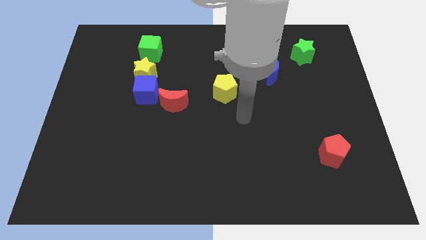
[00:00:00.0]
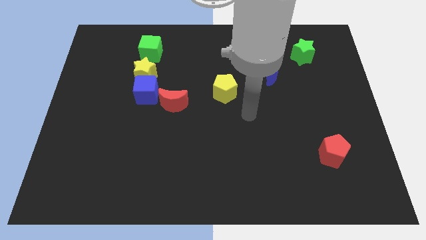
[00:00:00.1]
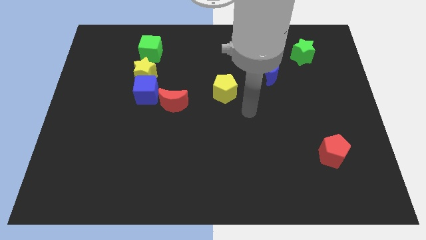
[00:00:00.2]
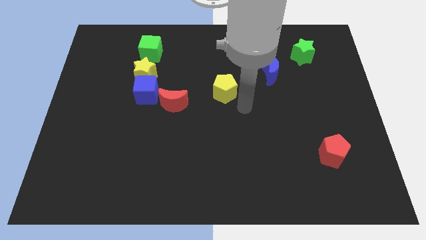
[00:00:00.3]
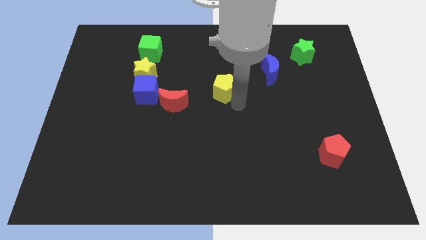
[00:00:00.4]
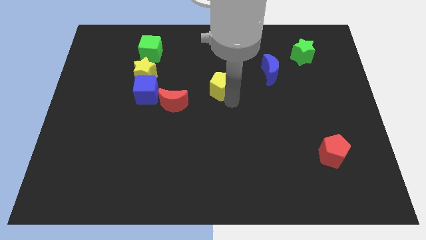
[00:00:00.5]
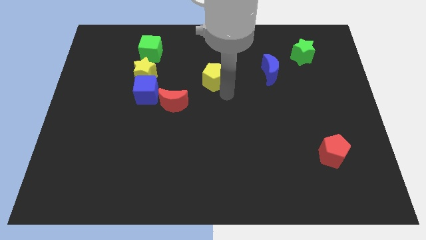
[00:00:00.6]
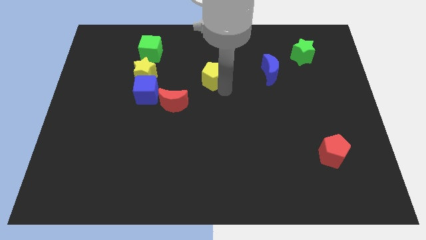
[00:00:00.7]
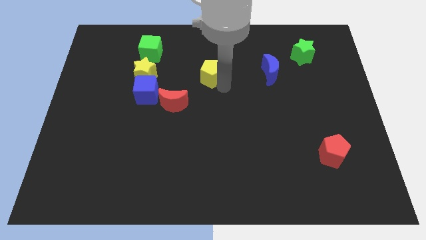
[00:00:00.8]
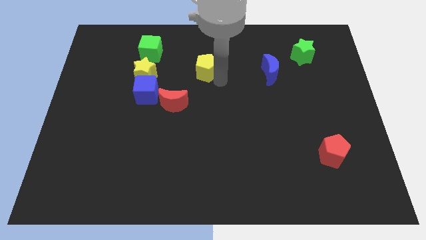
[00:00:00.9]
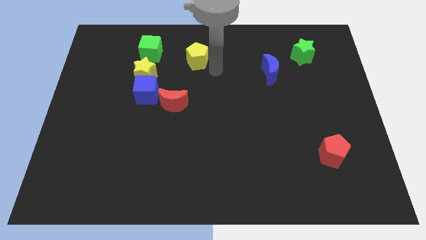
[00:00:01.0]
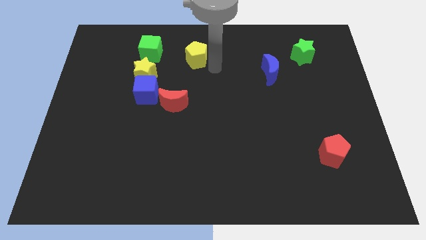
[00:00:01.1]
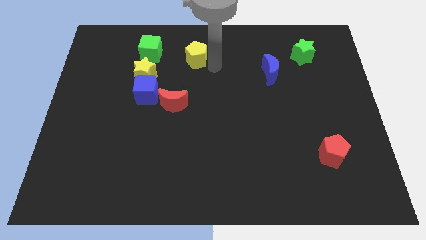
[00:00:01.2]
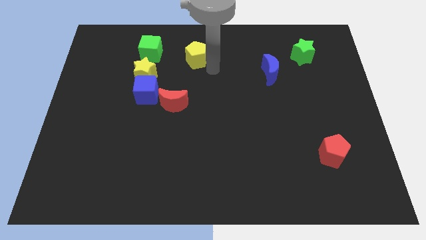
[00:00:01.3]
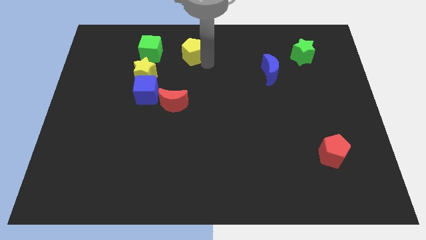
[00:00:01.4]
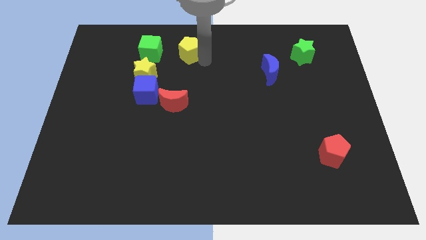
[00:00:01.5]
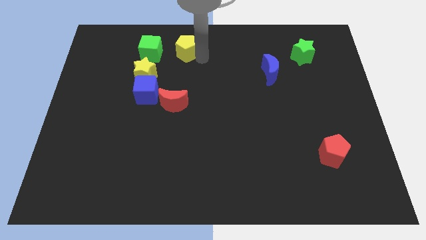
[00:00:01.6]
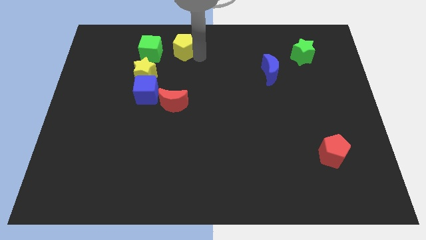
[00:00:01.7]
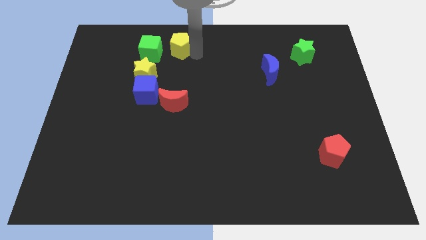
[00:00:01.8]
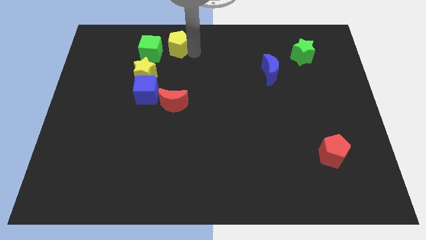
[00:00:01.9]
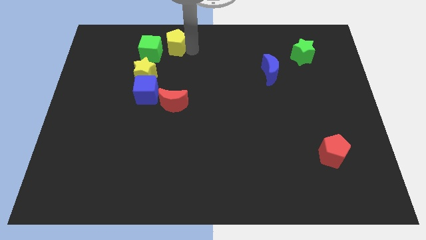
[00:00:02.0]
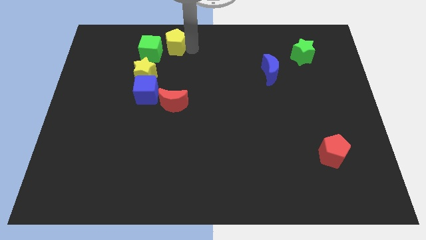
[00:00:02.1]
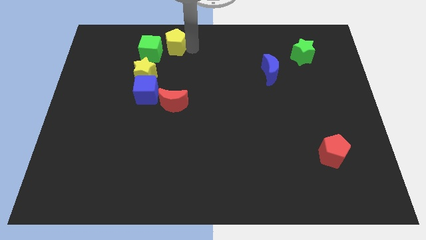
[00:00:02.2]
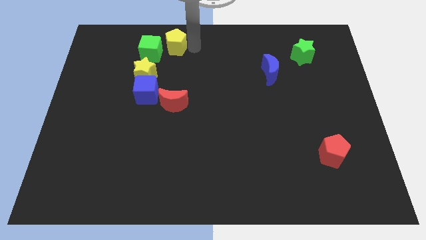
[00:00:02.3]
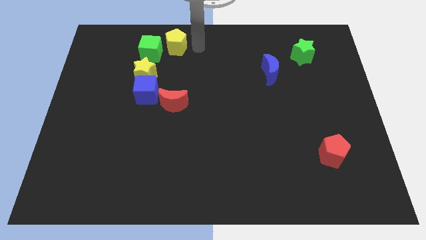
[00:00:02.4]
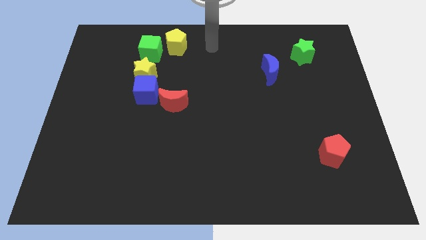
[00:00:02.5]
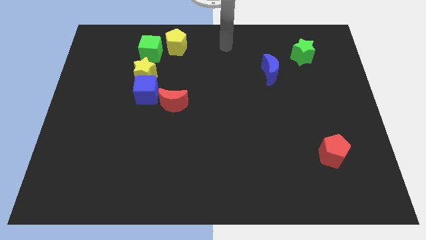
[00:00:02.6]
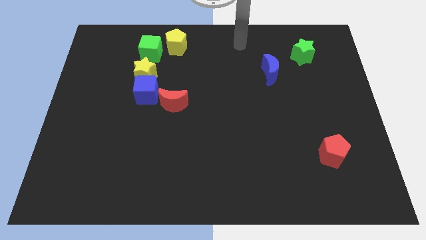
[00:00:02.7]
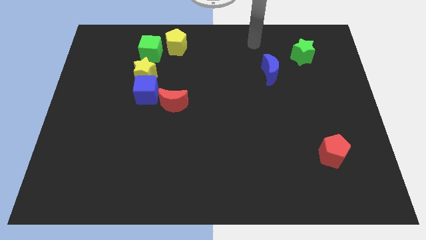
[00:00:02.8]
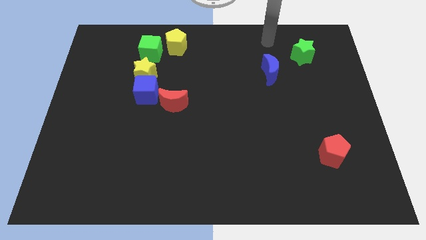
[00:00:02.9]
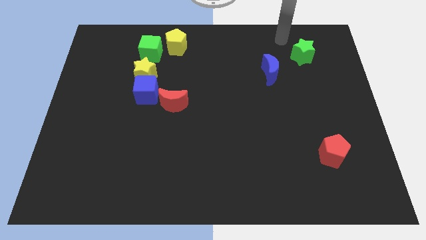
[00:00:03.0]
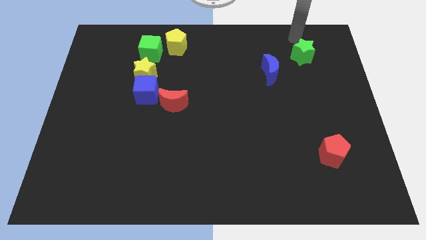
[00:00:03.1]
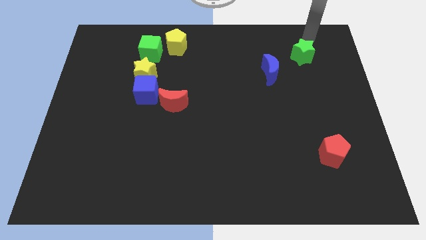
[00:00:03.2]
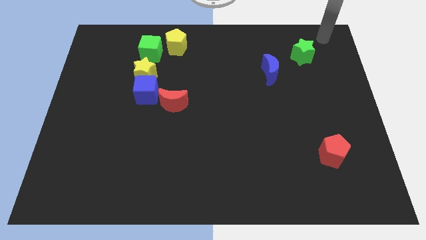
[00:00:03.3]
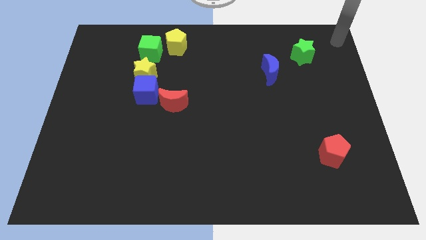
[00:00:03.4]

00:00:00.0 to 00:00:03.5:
push the yellow pentagon to the right of the green cube

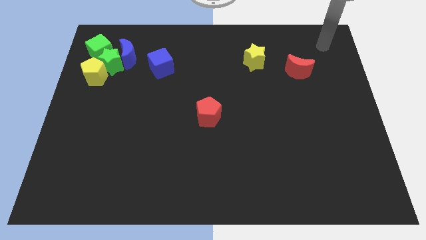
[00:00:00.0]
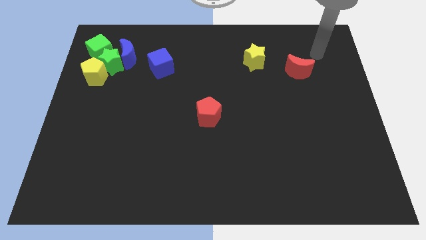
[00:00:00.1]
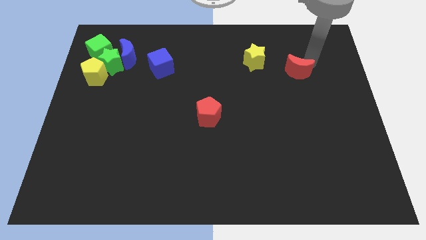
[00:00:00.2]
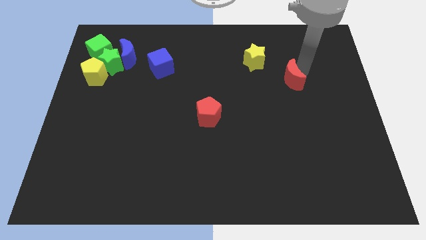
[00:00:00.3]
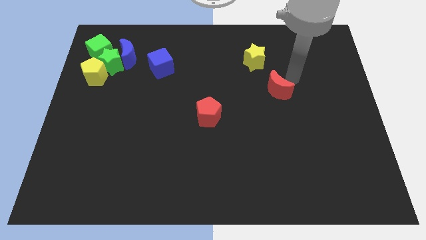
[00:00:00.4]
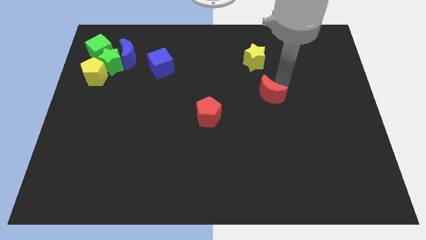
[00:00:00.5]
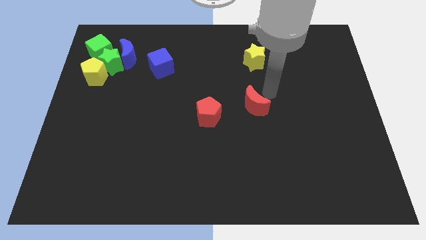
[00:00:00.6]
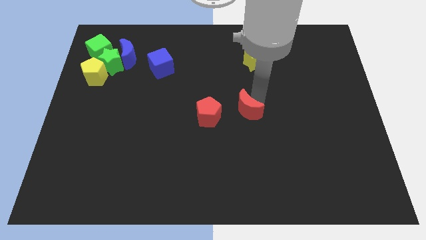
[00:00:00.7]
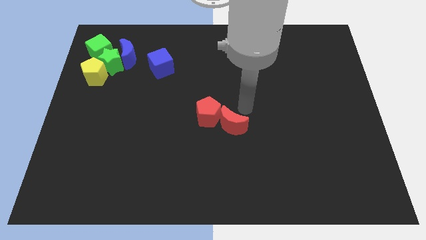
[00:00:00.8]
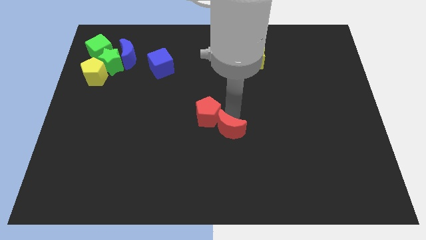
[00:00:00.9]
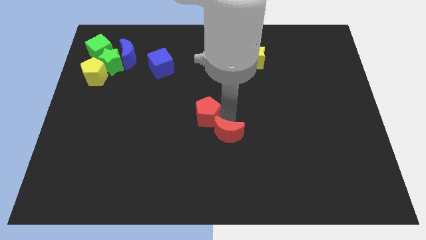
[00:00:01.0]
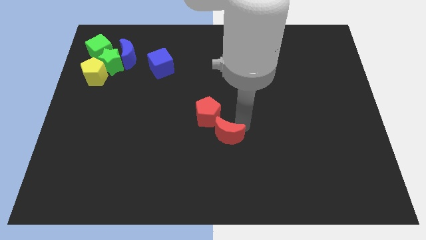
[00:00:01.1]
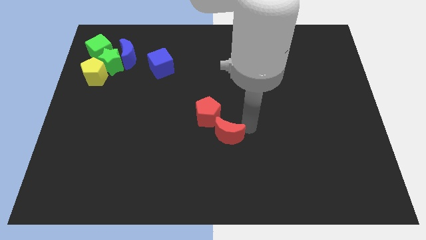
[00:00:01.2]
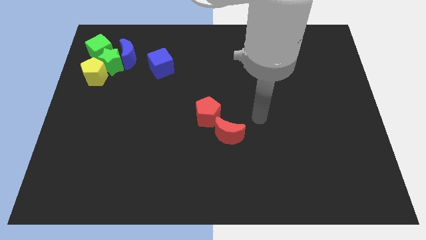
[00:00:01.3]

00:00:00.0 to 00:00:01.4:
move the red crescent to the right of the red pentagon

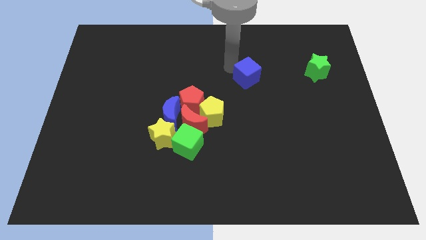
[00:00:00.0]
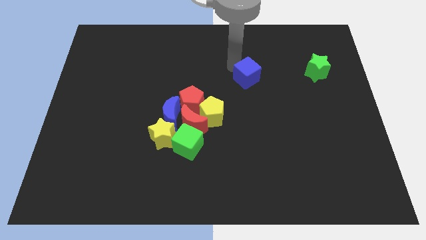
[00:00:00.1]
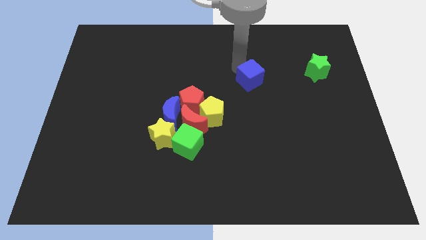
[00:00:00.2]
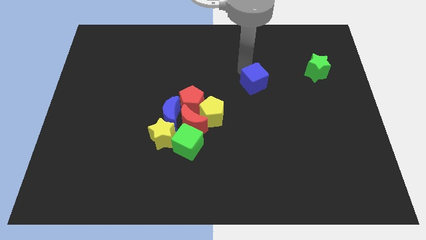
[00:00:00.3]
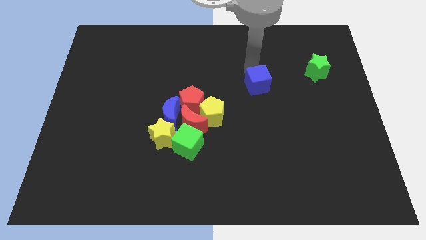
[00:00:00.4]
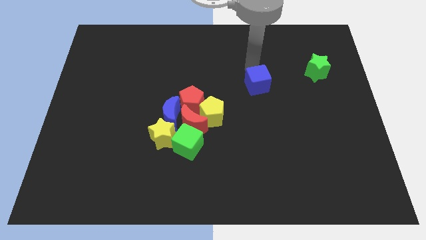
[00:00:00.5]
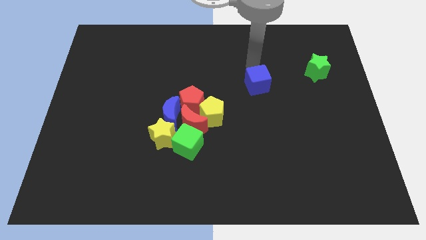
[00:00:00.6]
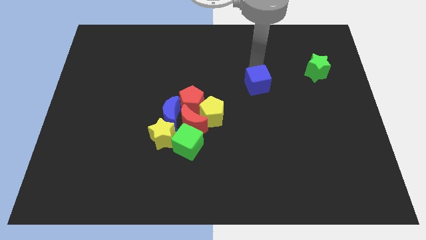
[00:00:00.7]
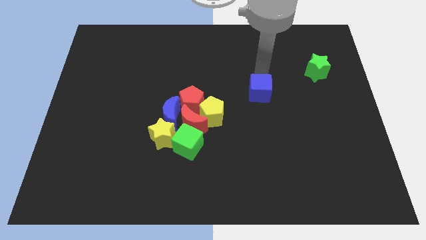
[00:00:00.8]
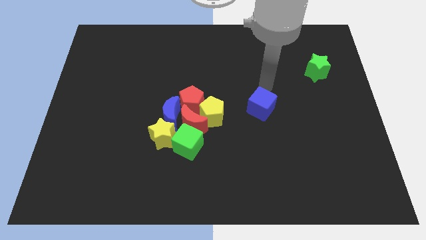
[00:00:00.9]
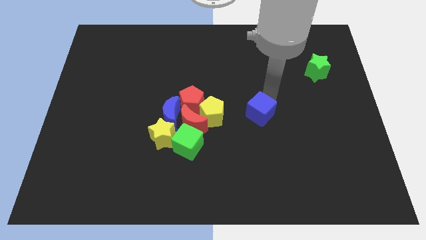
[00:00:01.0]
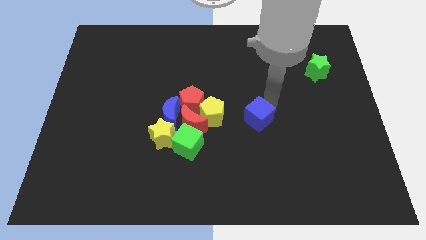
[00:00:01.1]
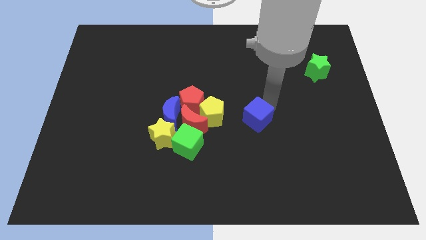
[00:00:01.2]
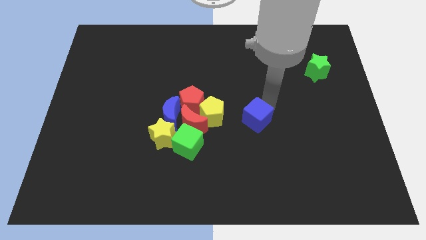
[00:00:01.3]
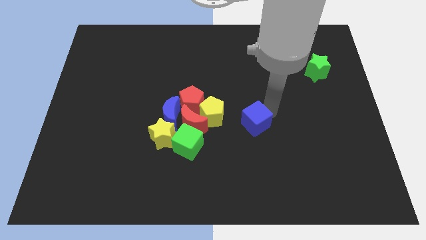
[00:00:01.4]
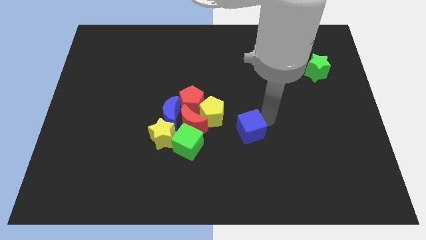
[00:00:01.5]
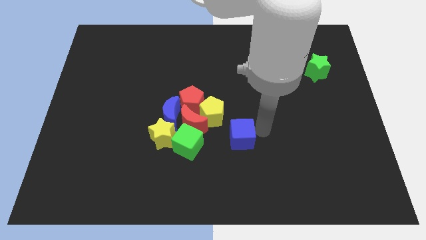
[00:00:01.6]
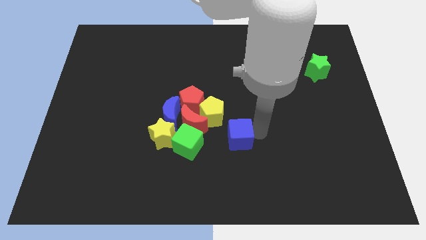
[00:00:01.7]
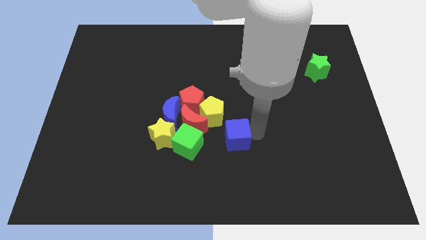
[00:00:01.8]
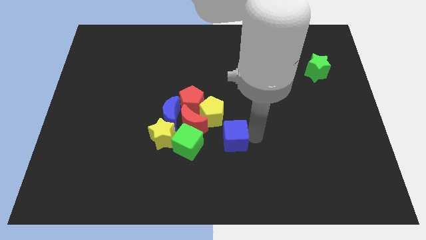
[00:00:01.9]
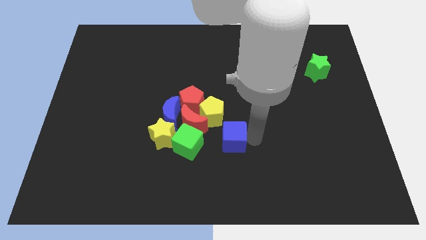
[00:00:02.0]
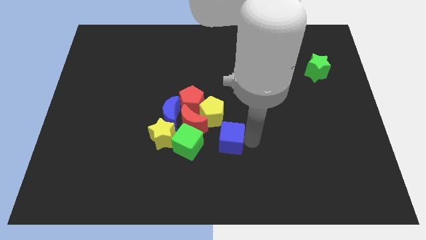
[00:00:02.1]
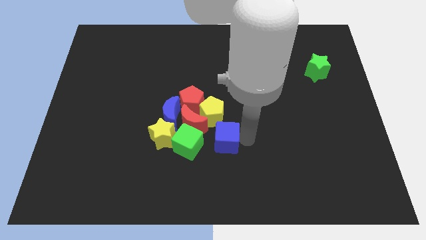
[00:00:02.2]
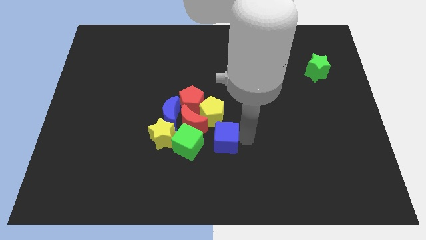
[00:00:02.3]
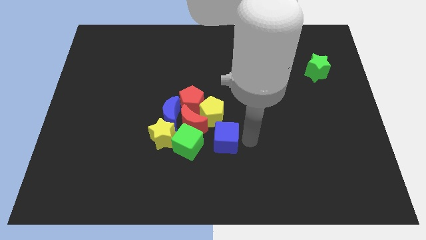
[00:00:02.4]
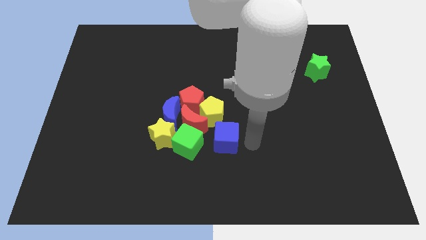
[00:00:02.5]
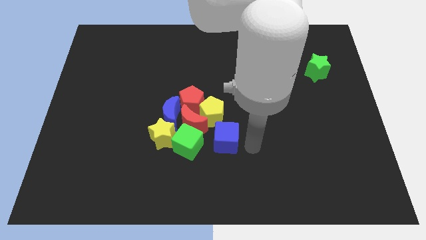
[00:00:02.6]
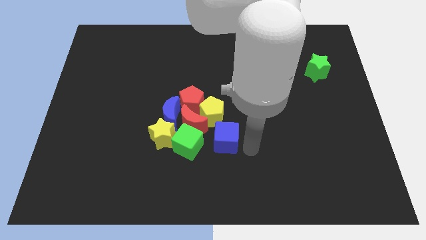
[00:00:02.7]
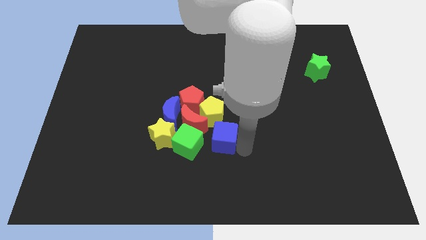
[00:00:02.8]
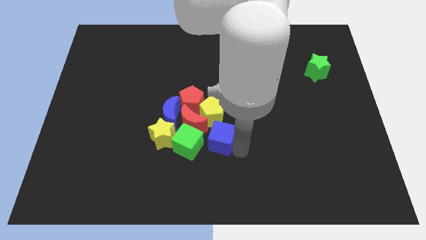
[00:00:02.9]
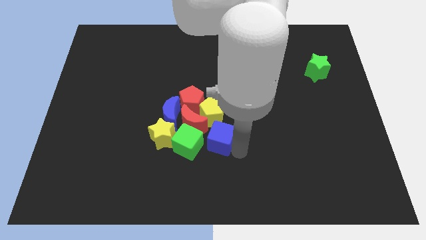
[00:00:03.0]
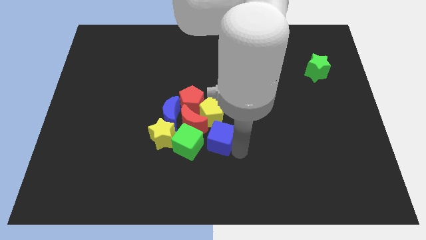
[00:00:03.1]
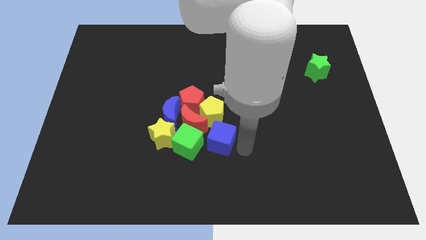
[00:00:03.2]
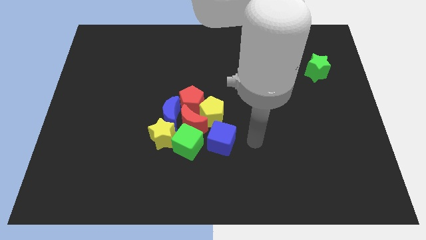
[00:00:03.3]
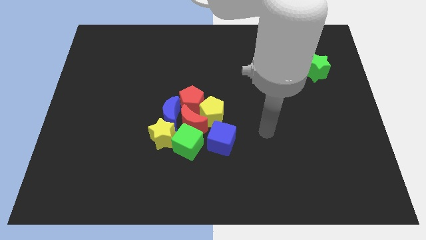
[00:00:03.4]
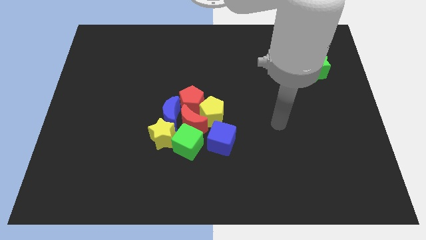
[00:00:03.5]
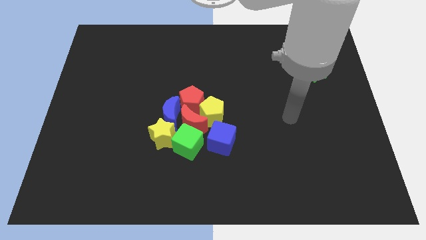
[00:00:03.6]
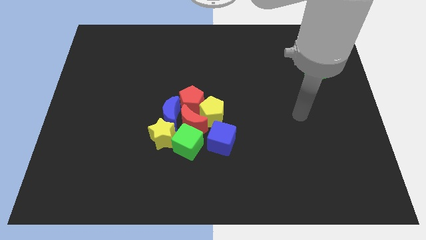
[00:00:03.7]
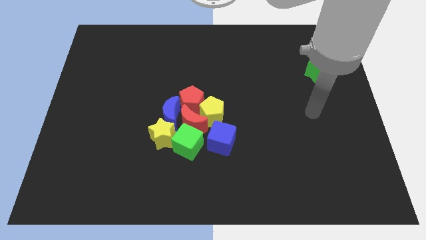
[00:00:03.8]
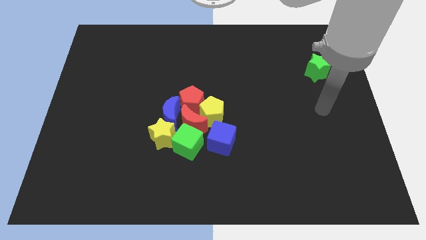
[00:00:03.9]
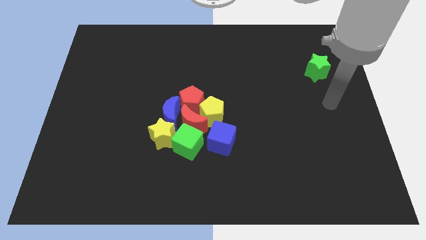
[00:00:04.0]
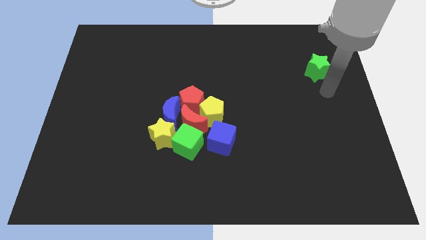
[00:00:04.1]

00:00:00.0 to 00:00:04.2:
place the blue cube right to the green cube
